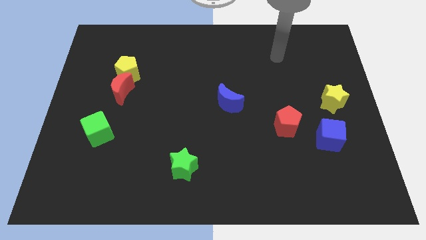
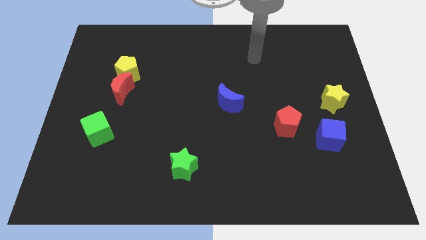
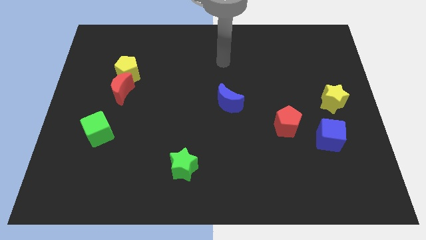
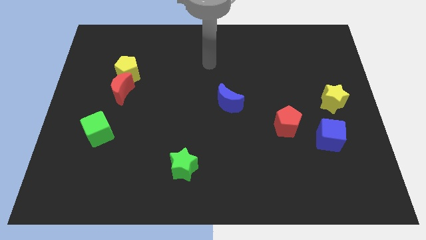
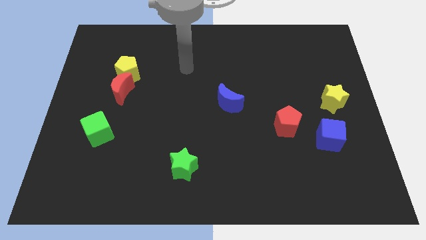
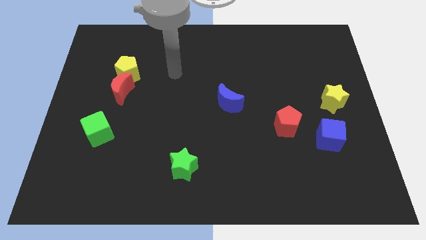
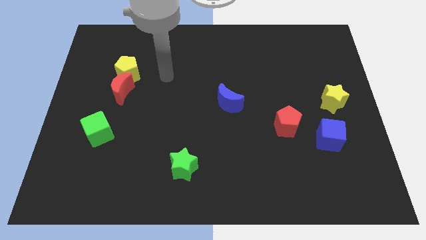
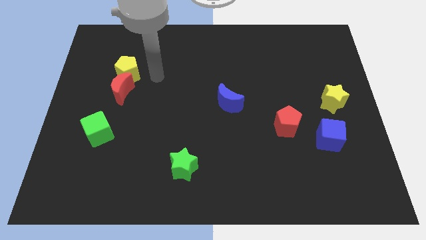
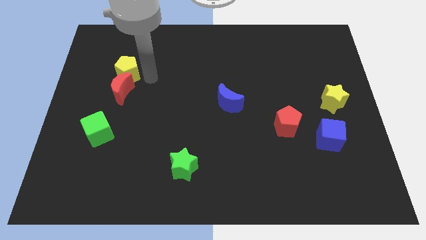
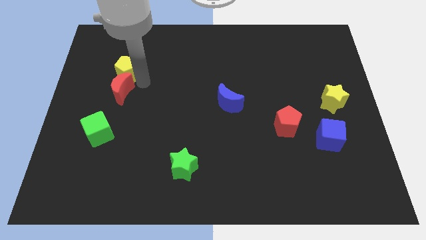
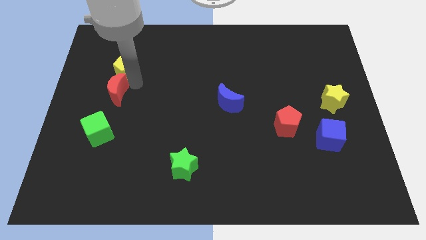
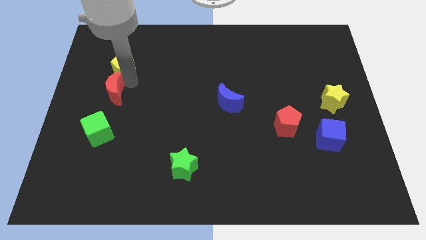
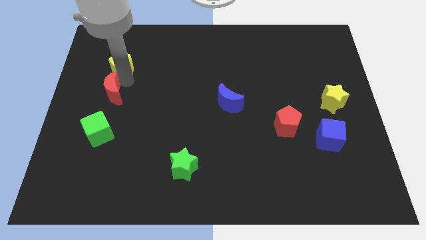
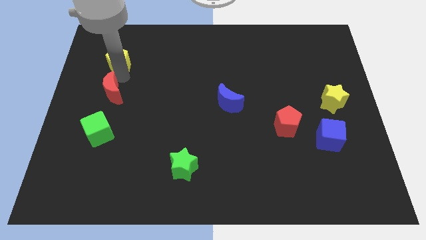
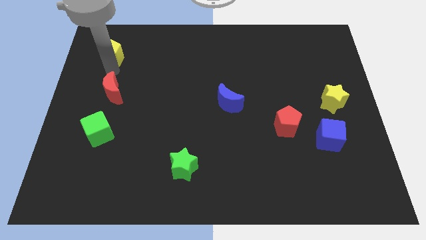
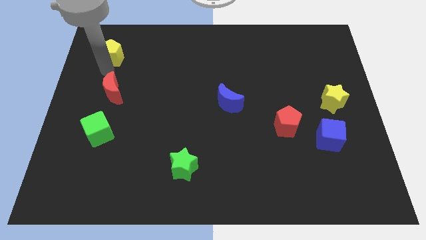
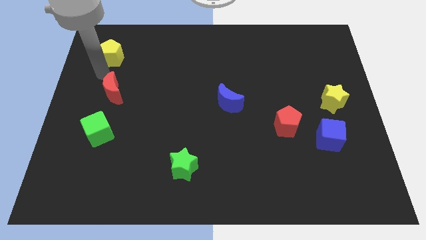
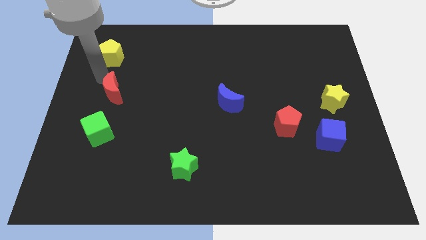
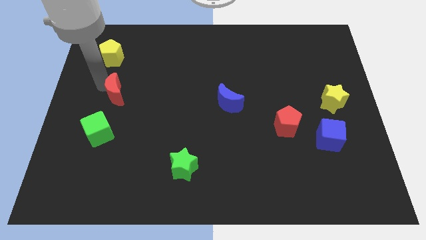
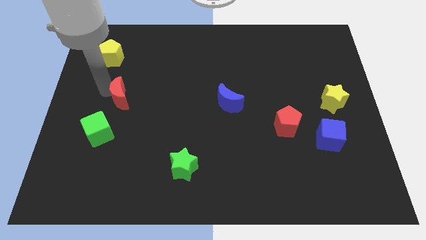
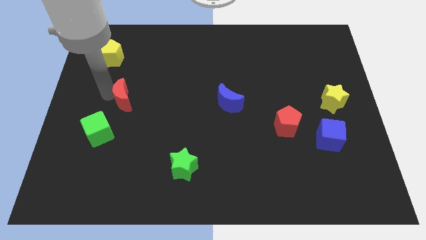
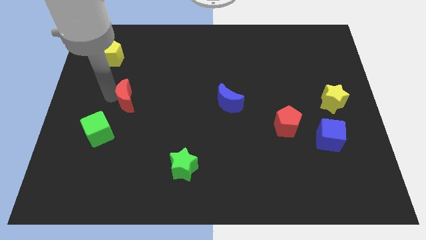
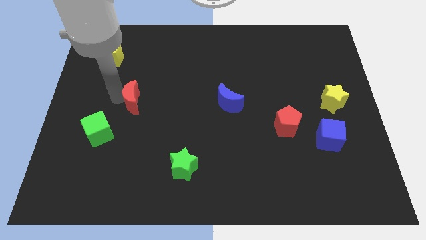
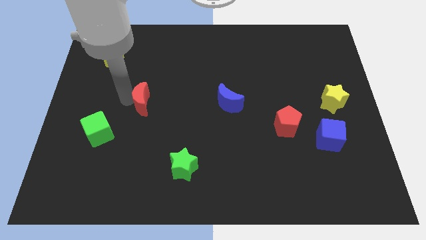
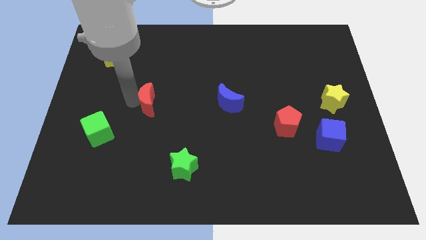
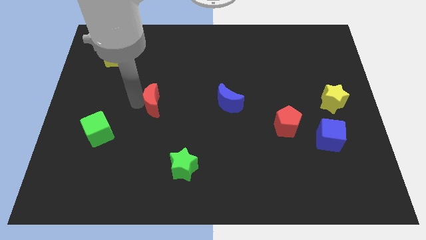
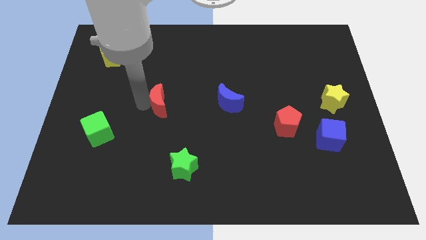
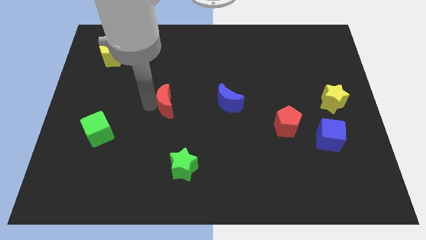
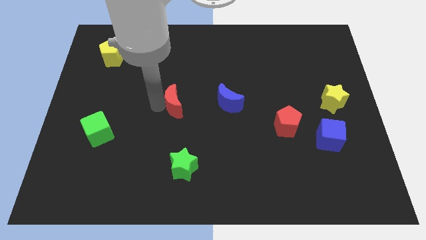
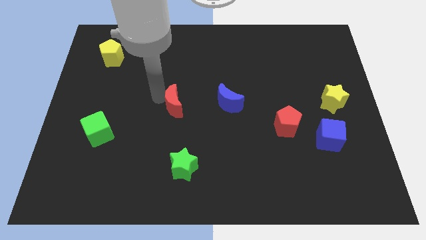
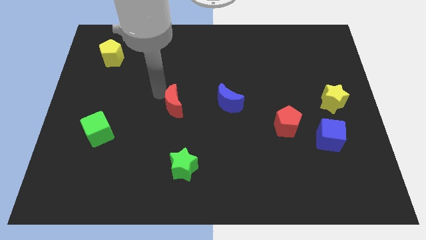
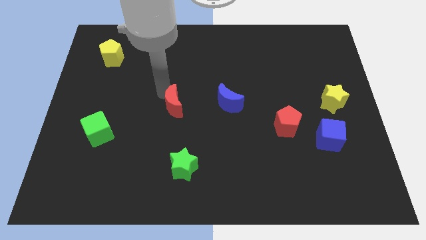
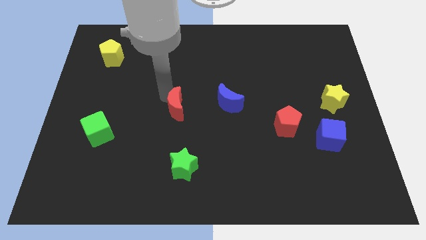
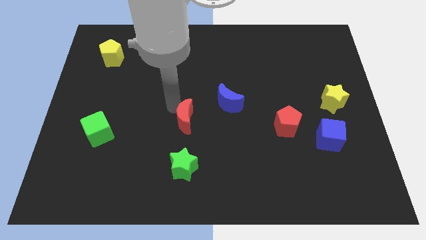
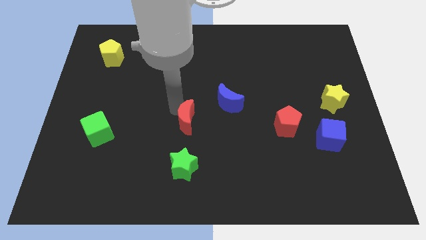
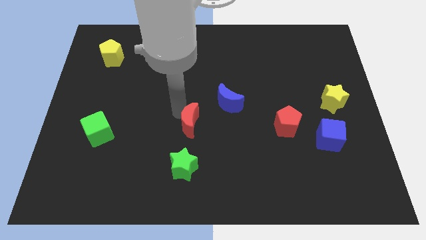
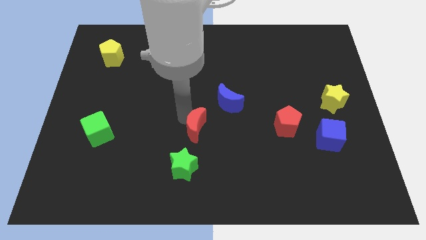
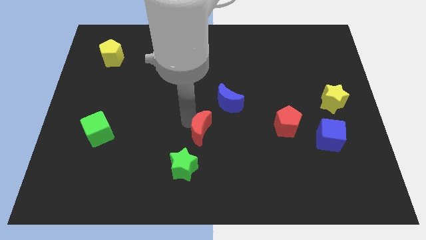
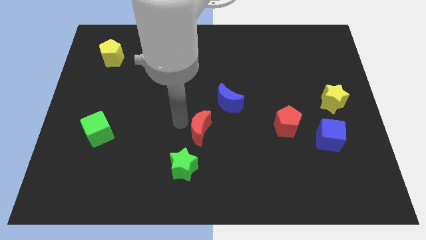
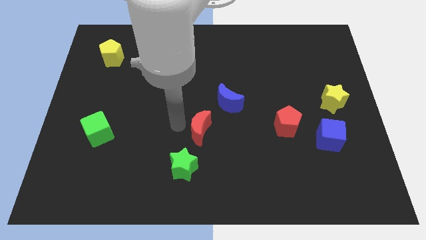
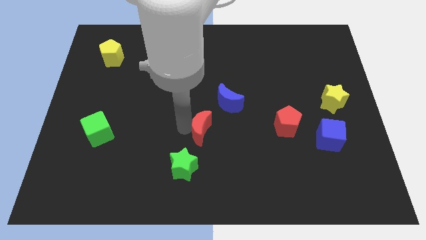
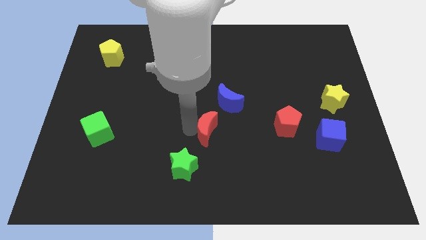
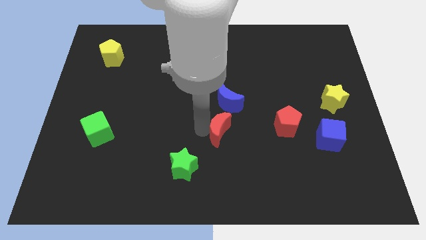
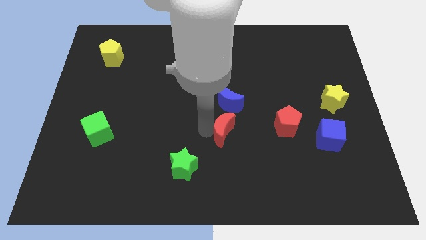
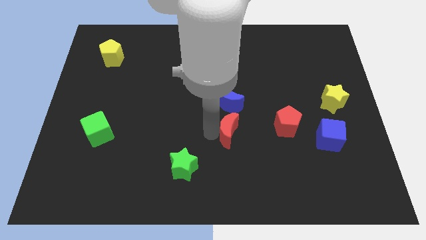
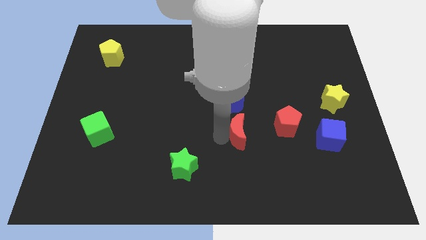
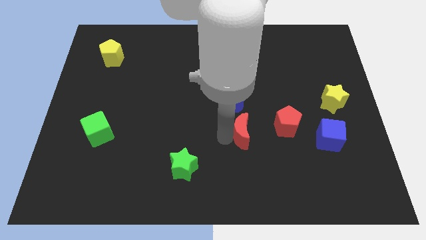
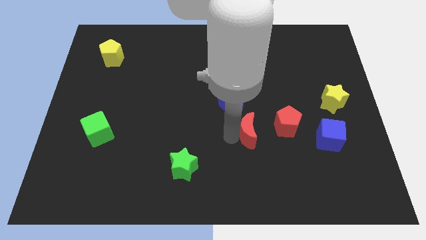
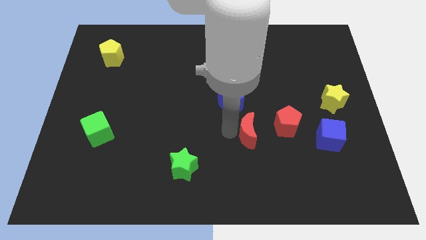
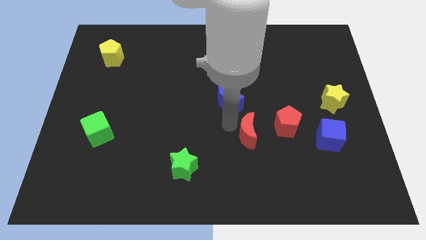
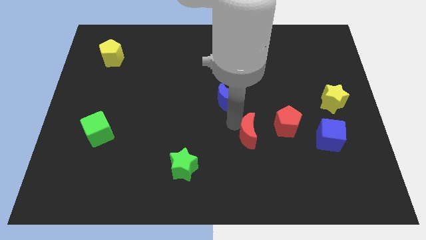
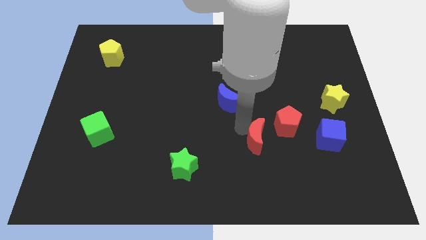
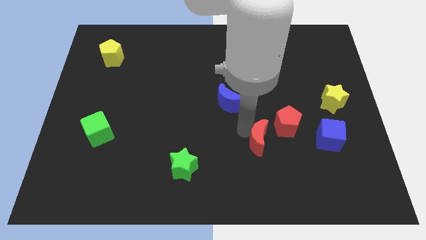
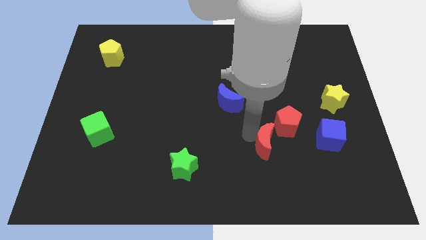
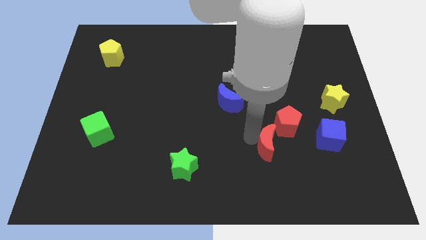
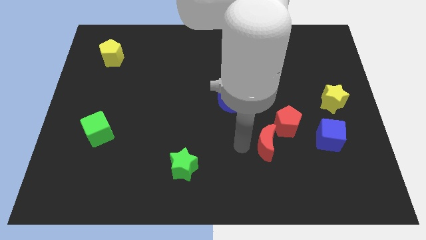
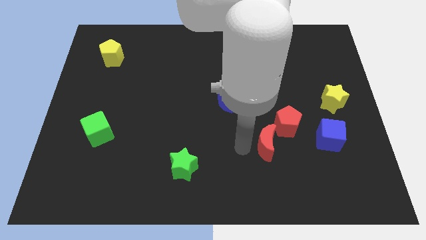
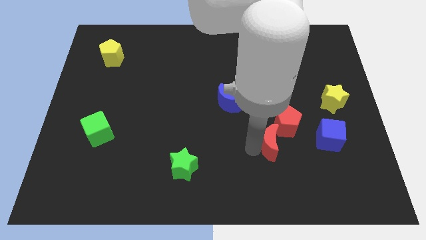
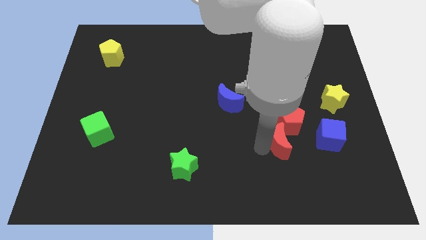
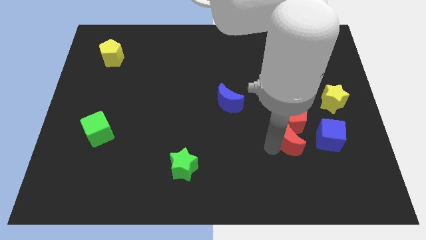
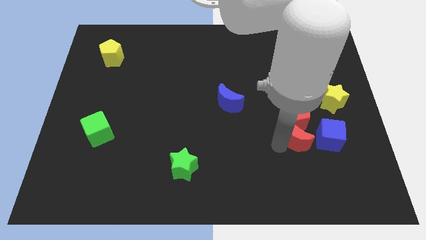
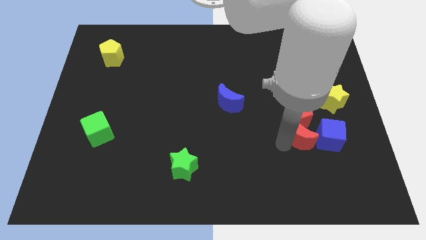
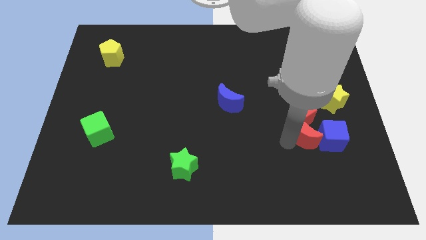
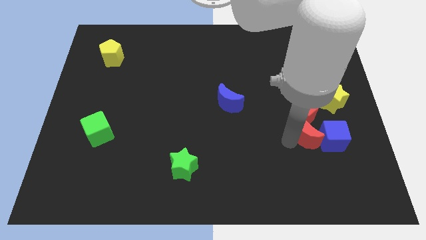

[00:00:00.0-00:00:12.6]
push the red moon close to the blue cube

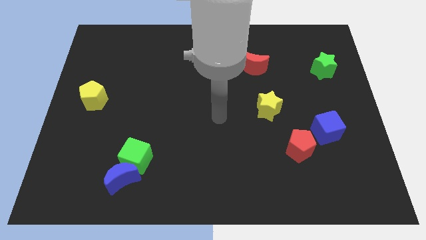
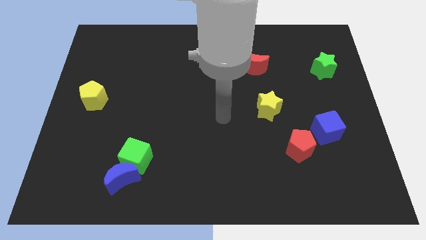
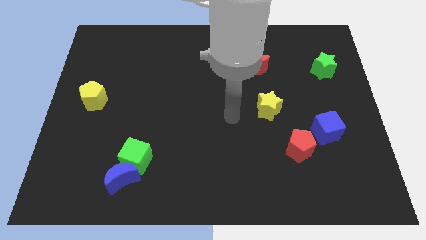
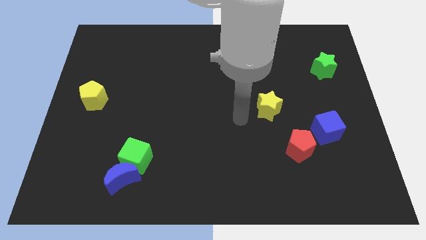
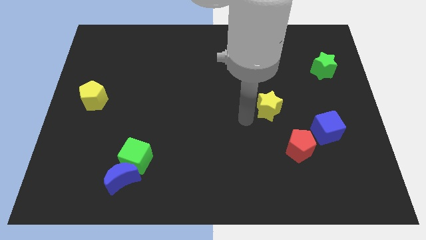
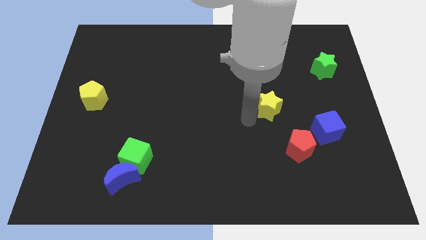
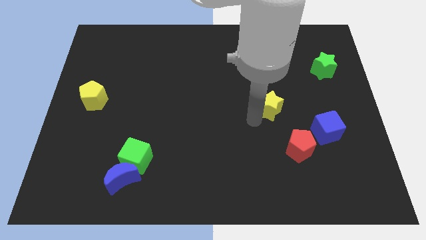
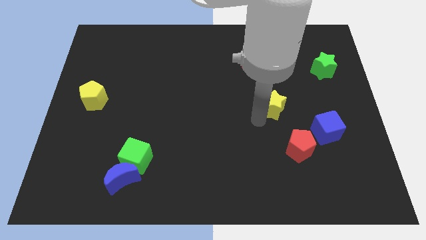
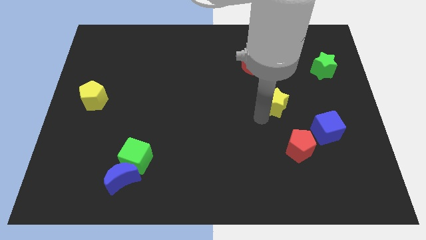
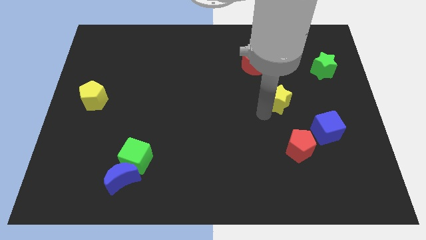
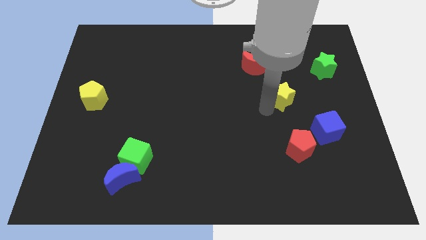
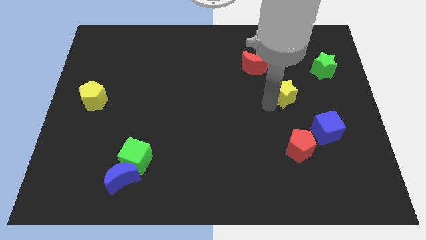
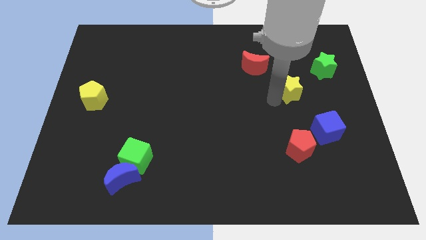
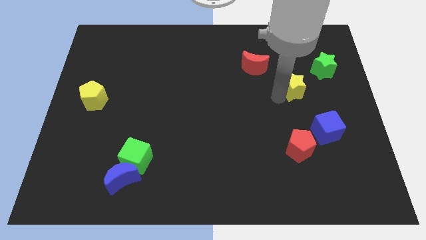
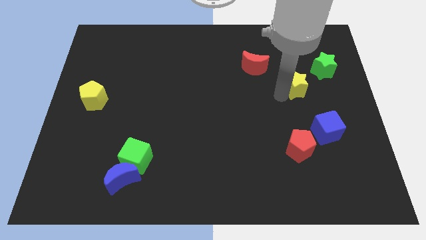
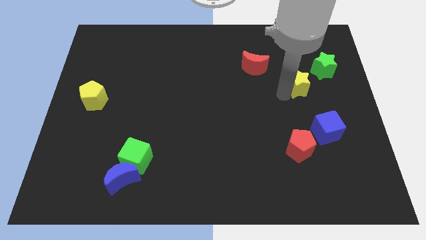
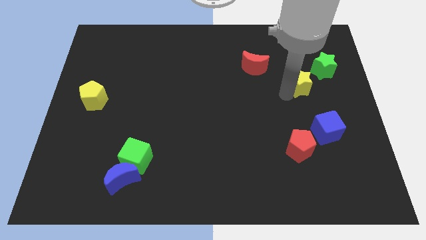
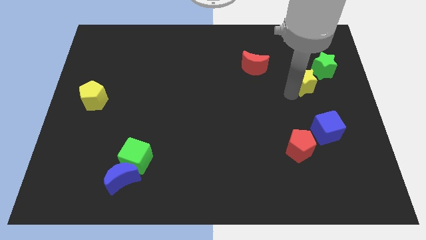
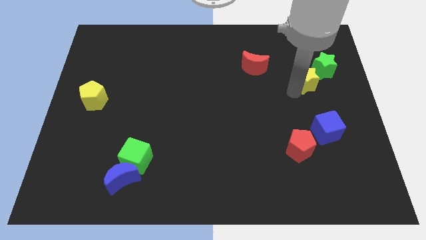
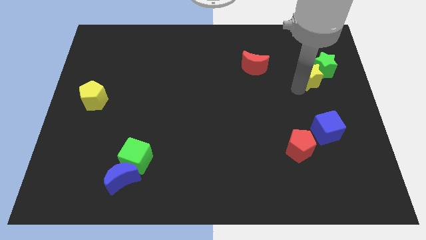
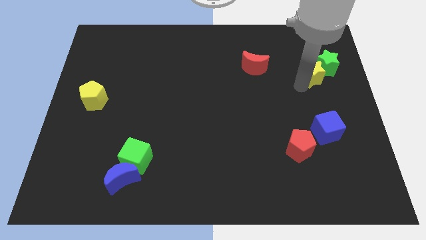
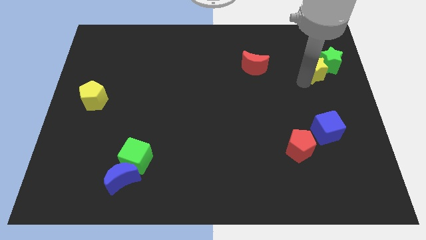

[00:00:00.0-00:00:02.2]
put the yellow star towards the green star
